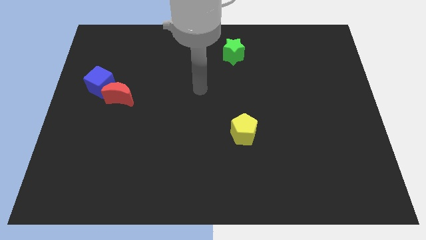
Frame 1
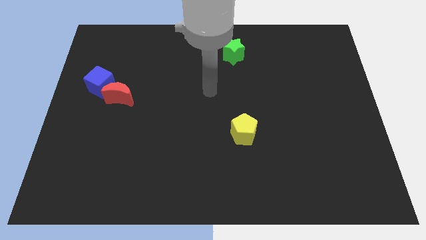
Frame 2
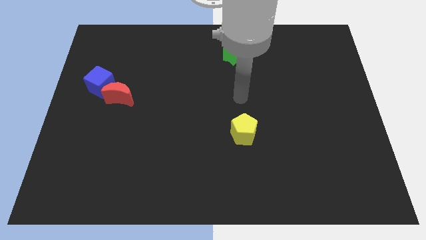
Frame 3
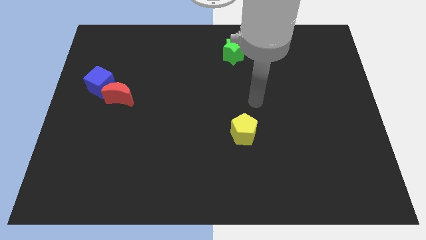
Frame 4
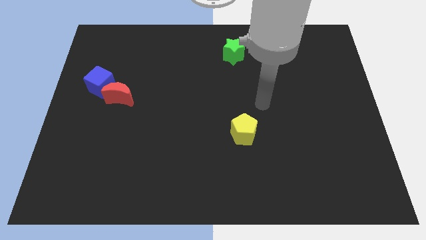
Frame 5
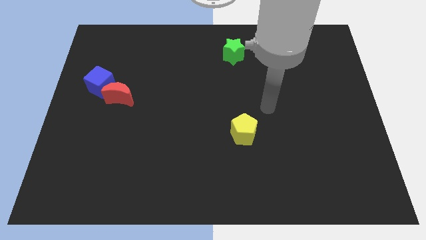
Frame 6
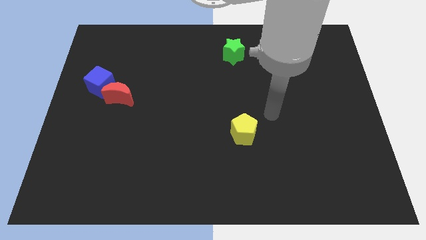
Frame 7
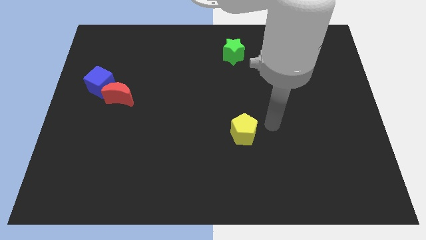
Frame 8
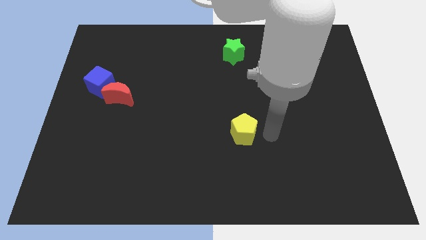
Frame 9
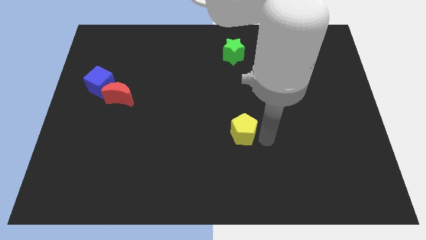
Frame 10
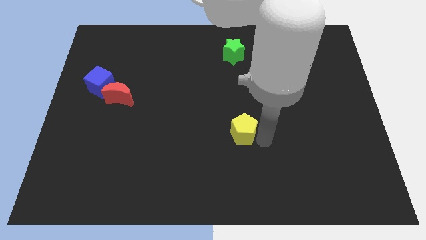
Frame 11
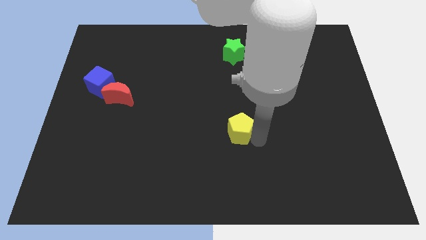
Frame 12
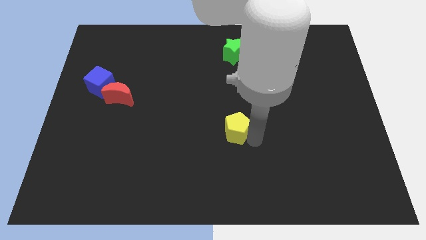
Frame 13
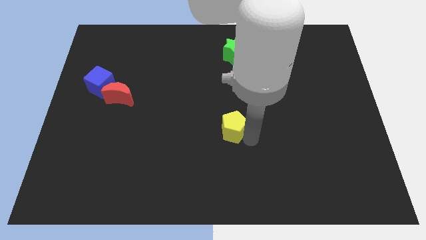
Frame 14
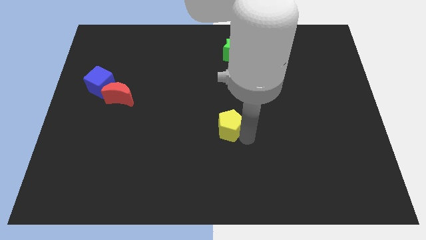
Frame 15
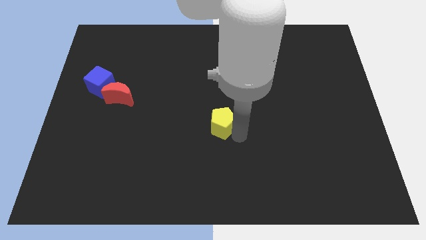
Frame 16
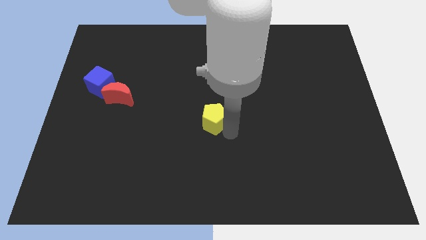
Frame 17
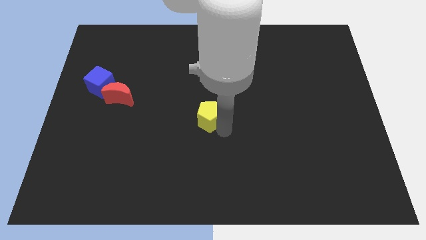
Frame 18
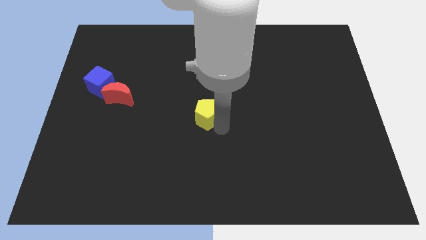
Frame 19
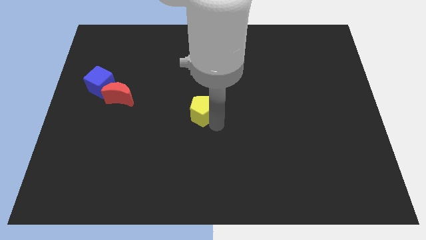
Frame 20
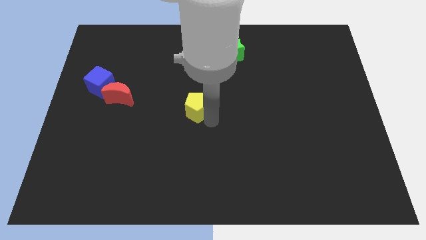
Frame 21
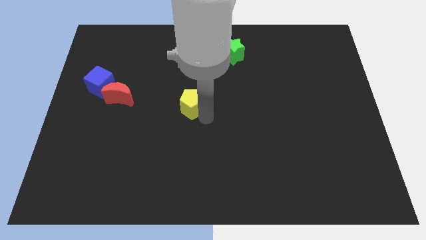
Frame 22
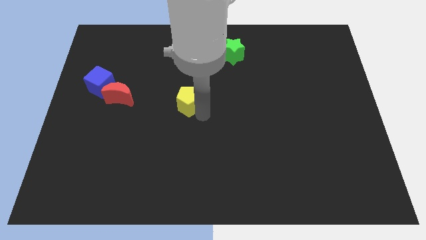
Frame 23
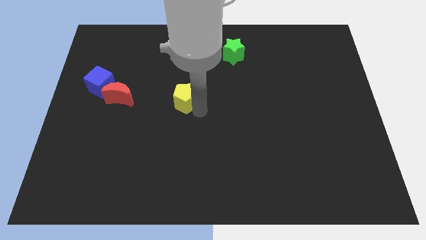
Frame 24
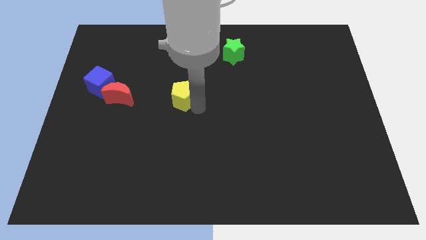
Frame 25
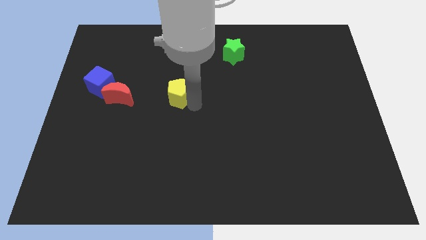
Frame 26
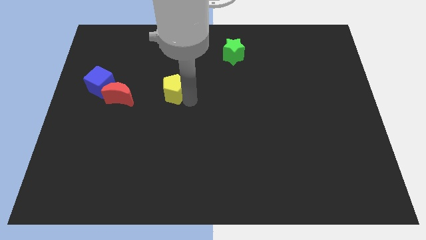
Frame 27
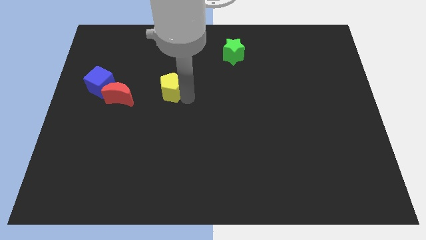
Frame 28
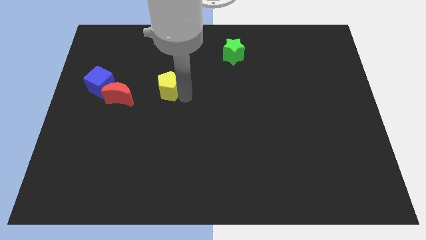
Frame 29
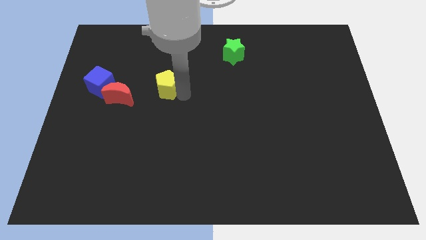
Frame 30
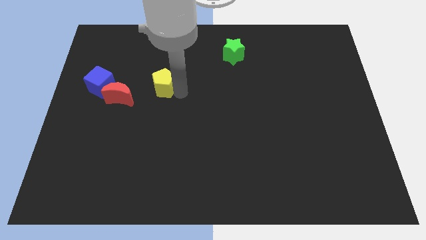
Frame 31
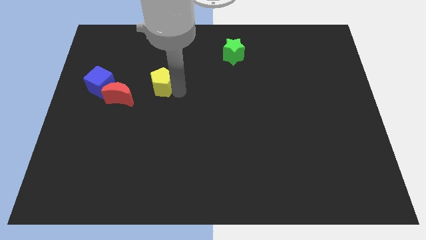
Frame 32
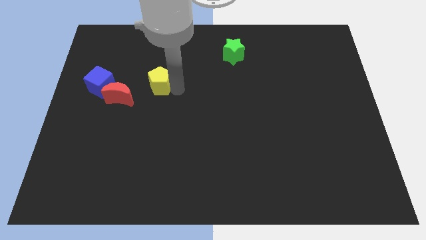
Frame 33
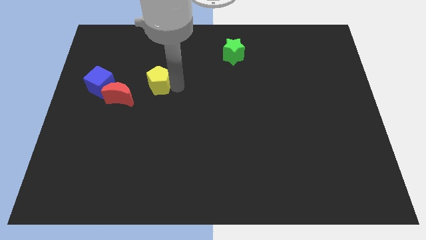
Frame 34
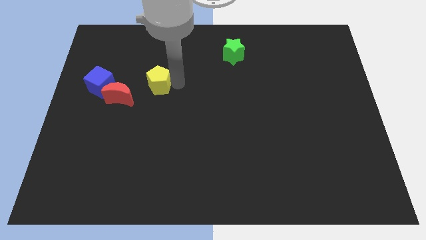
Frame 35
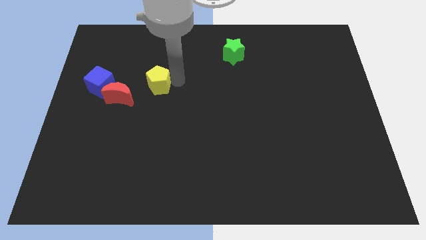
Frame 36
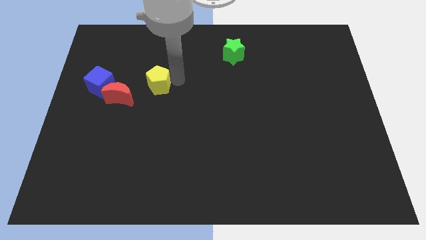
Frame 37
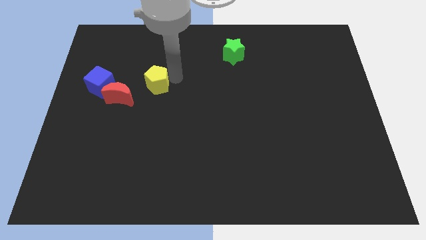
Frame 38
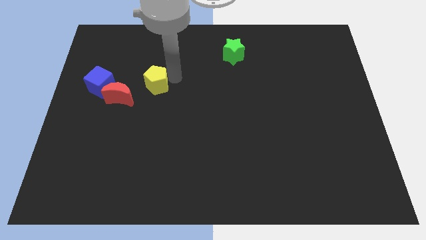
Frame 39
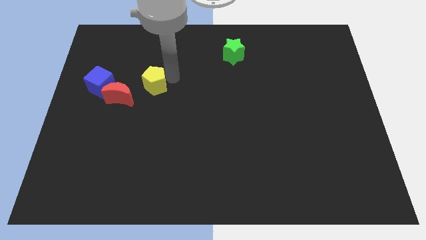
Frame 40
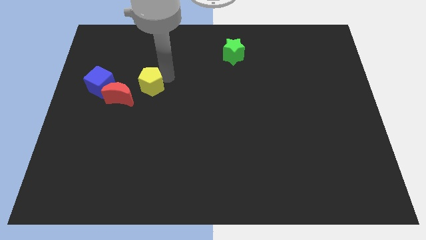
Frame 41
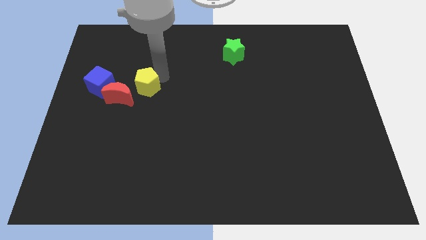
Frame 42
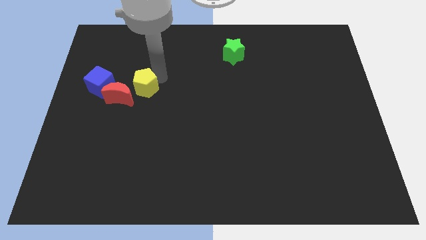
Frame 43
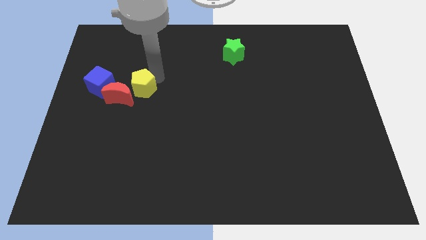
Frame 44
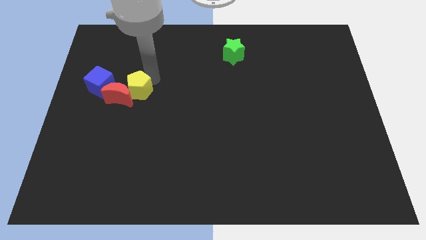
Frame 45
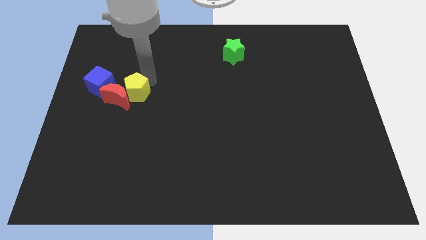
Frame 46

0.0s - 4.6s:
push the yellow block towards the moon

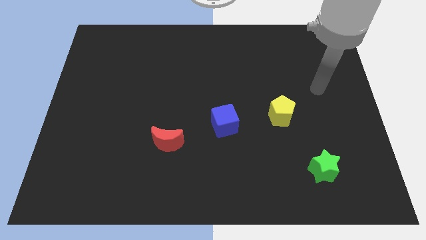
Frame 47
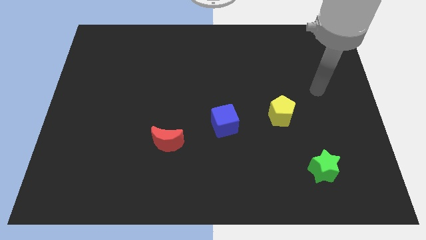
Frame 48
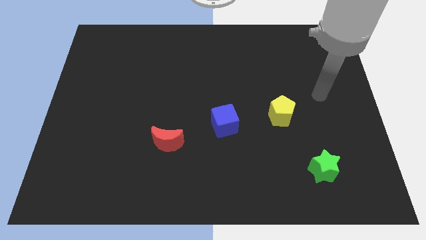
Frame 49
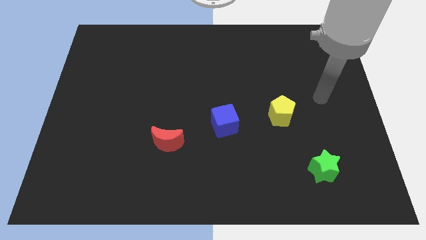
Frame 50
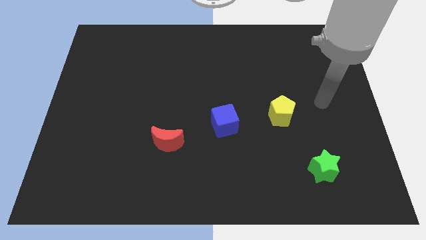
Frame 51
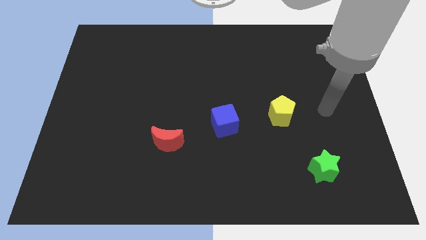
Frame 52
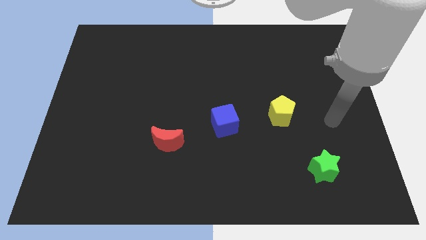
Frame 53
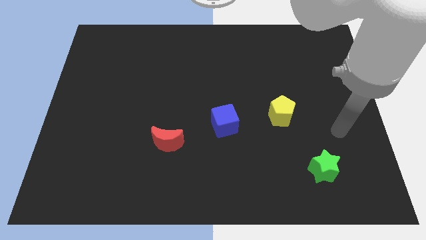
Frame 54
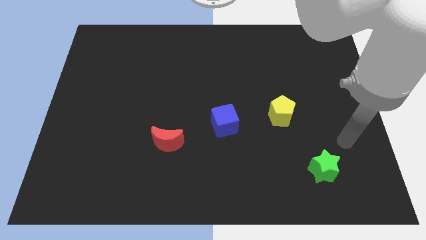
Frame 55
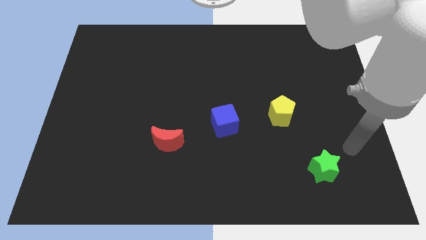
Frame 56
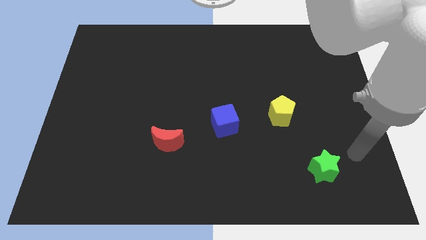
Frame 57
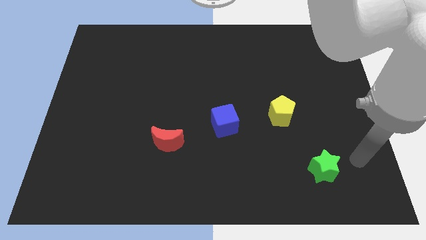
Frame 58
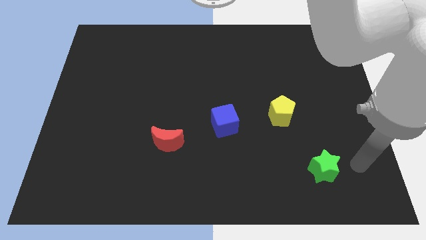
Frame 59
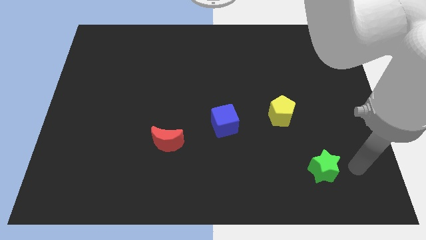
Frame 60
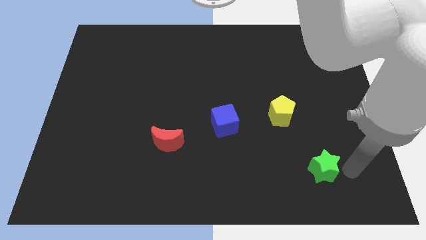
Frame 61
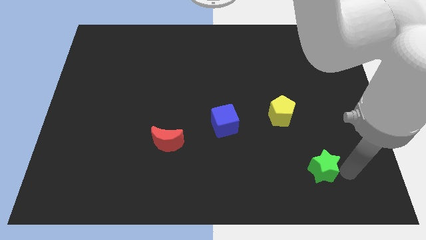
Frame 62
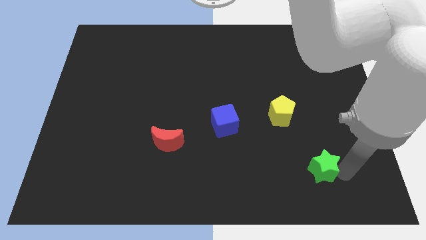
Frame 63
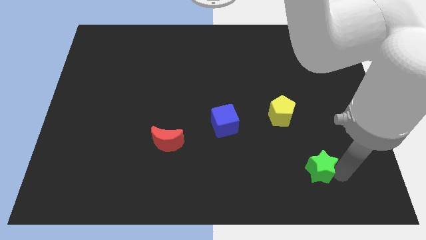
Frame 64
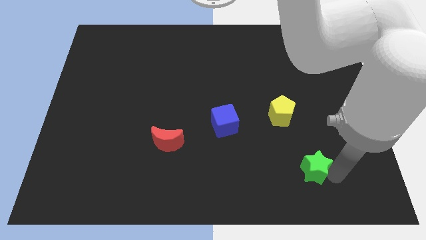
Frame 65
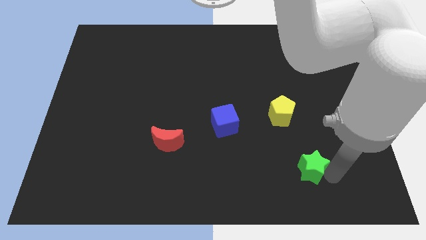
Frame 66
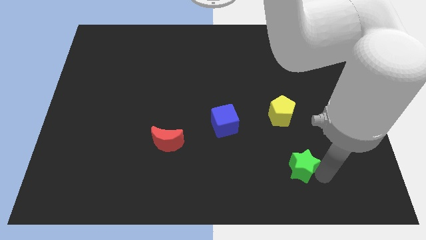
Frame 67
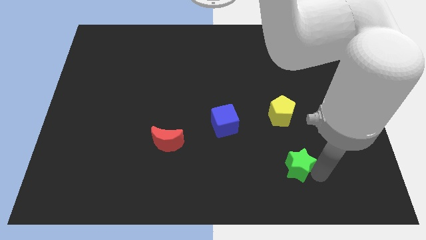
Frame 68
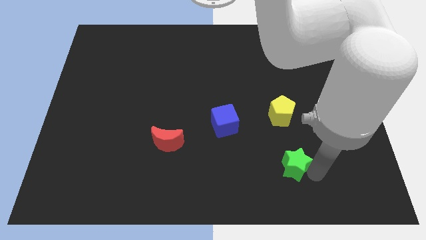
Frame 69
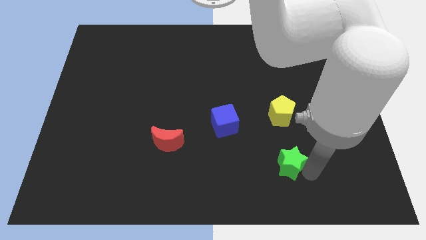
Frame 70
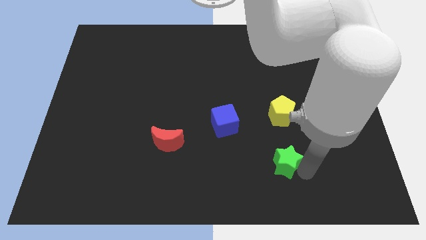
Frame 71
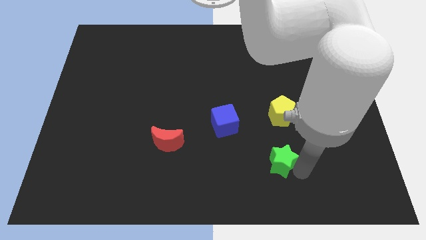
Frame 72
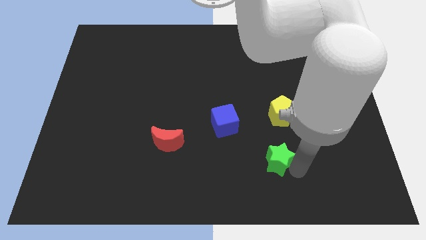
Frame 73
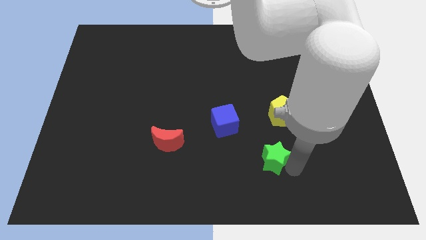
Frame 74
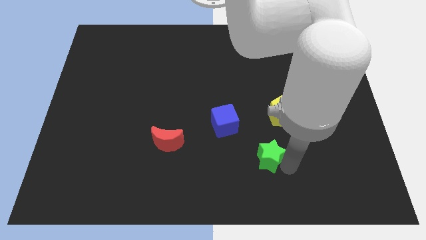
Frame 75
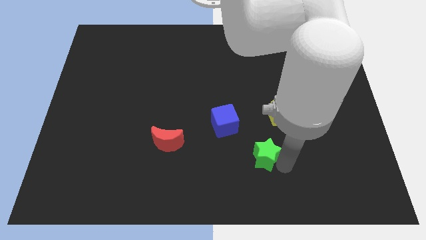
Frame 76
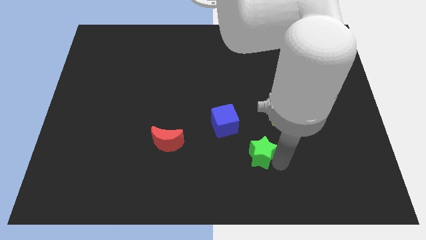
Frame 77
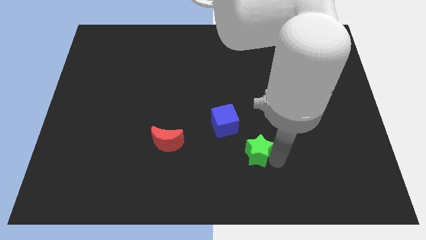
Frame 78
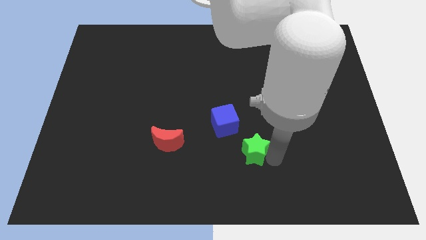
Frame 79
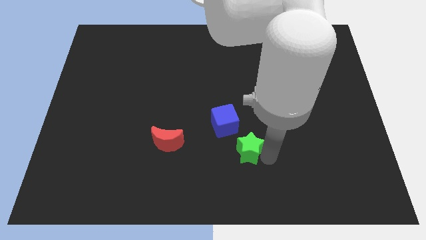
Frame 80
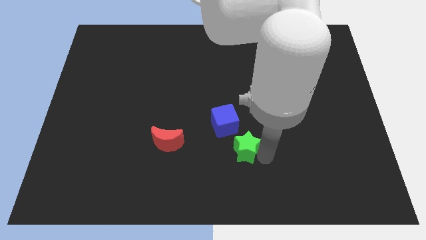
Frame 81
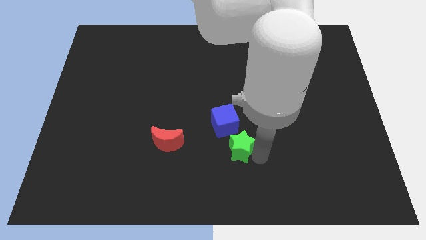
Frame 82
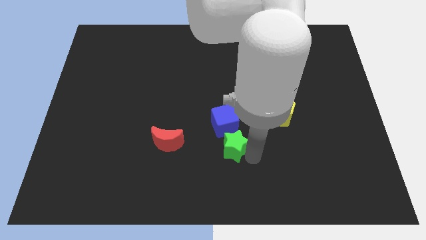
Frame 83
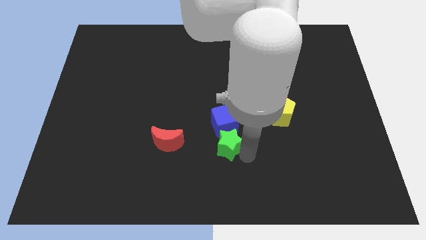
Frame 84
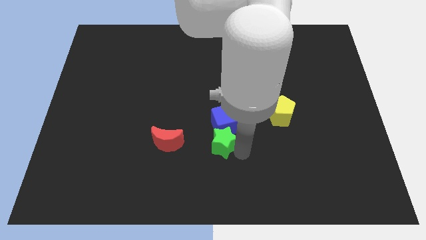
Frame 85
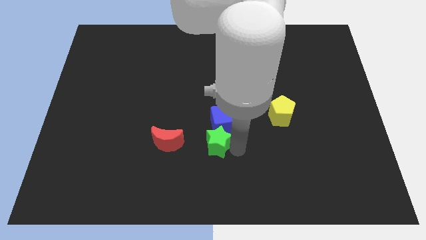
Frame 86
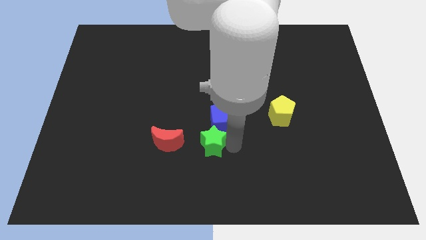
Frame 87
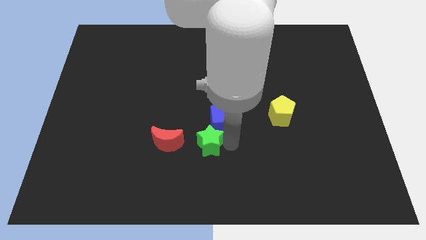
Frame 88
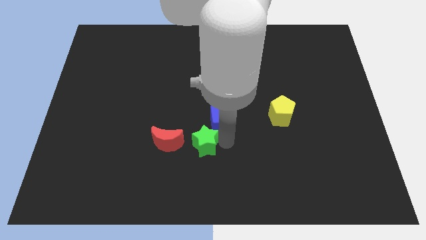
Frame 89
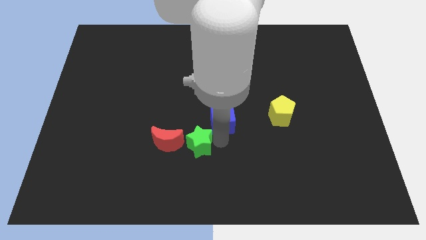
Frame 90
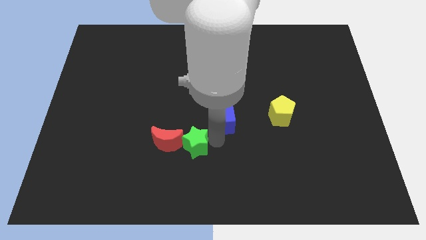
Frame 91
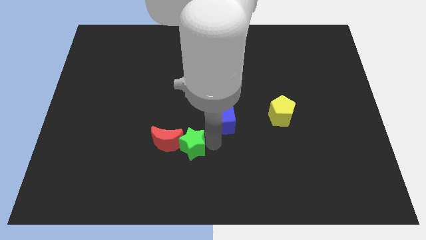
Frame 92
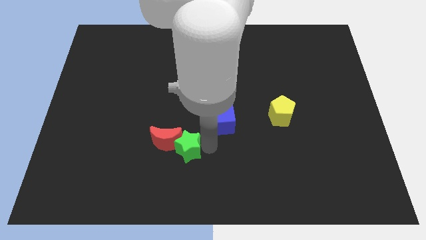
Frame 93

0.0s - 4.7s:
push the green star close to the red block
